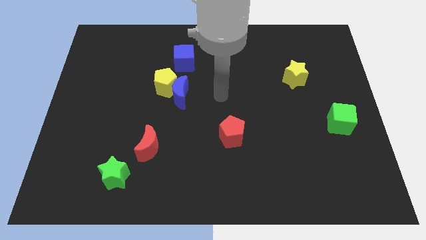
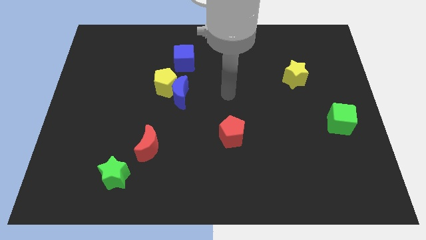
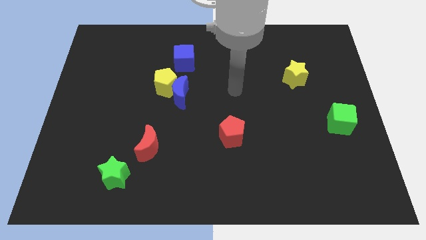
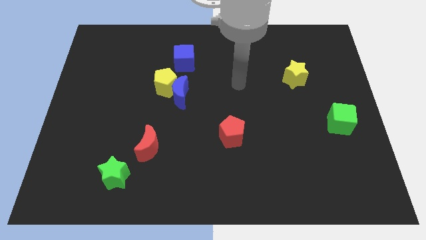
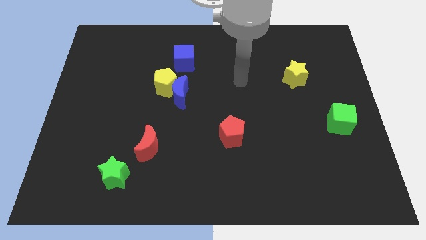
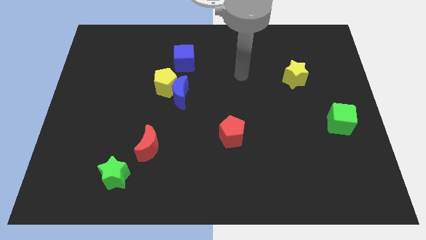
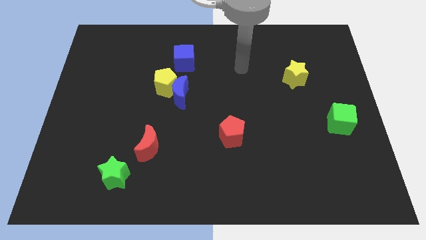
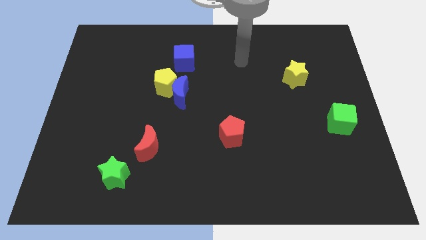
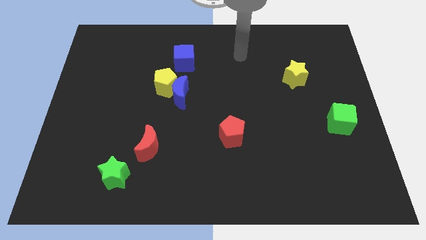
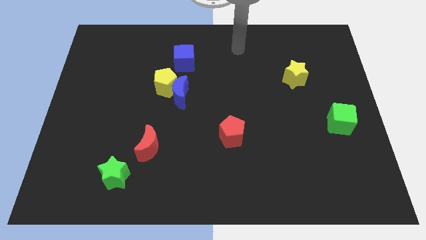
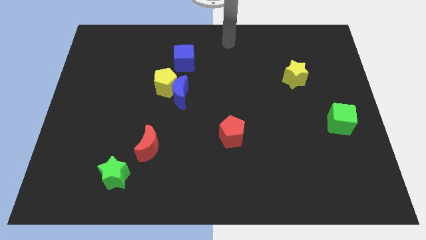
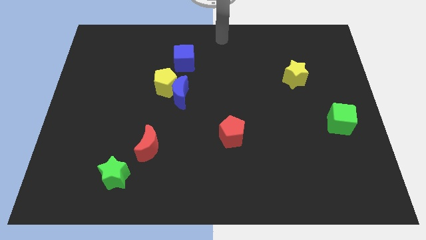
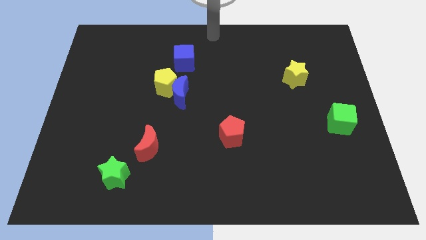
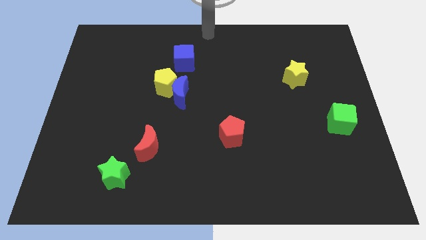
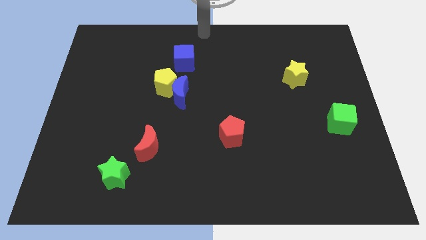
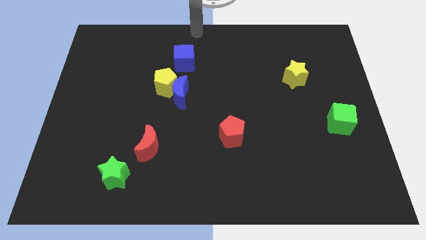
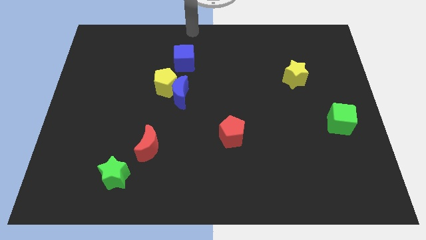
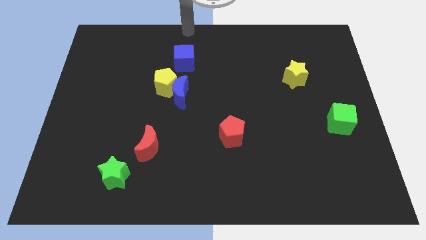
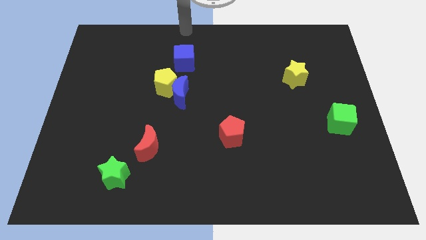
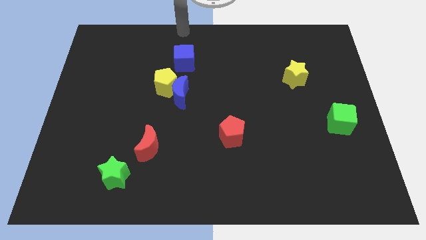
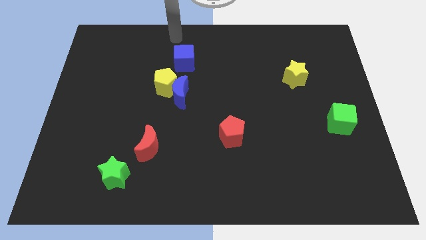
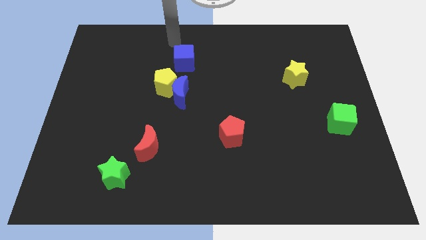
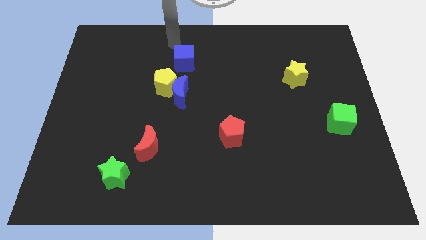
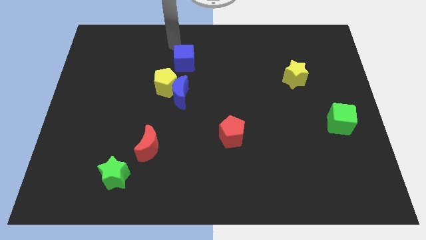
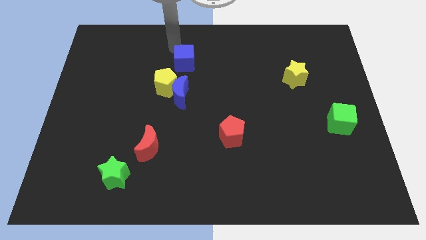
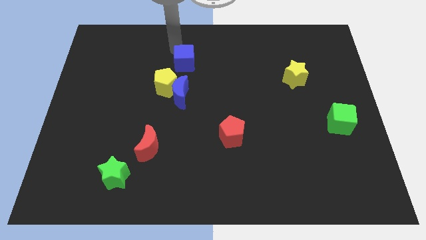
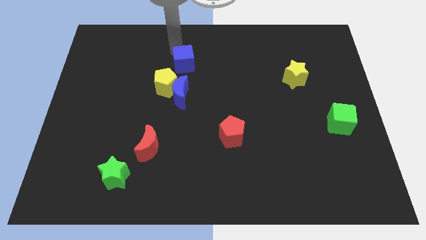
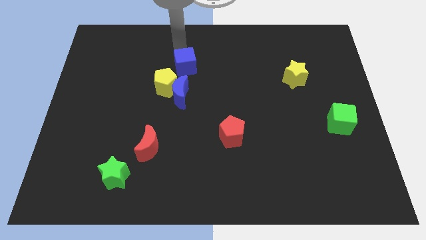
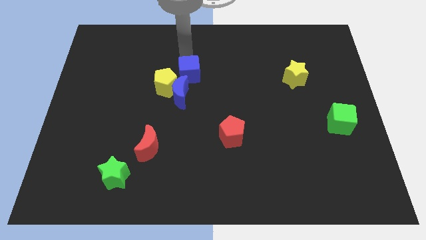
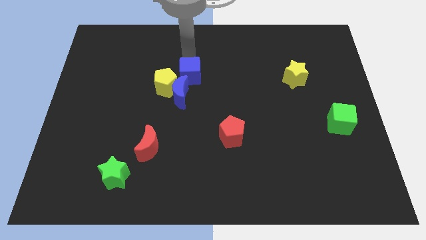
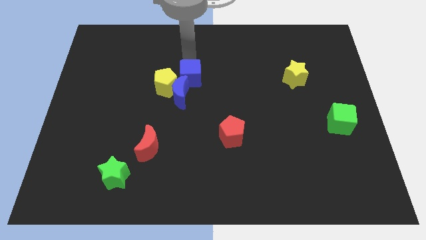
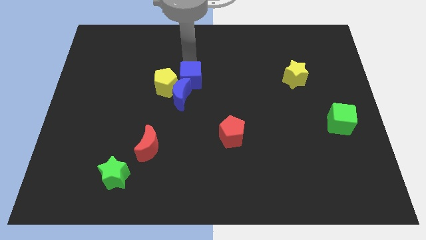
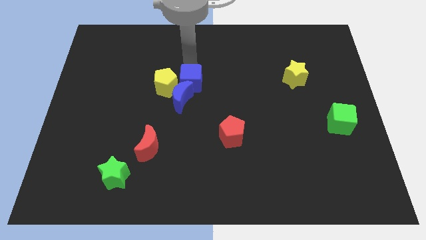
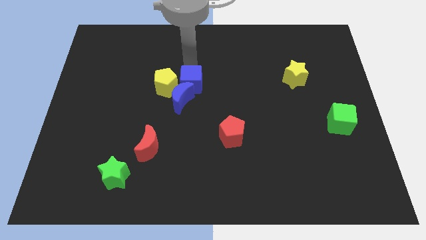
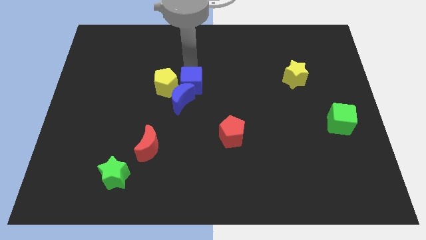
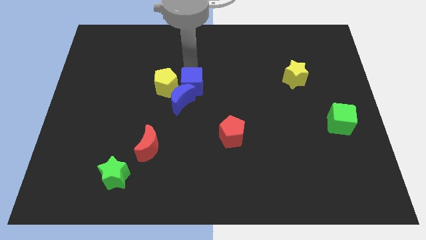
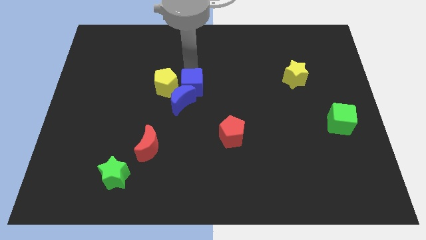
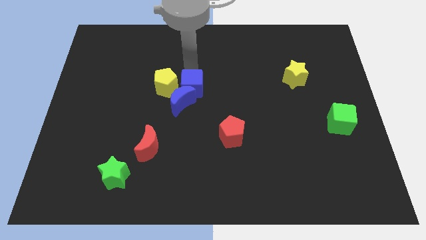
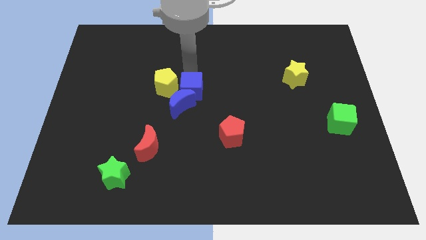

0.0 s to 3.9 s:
push the blue cube to the right of the yellow pentagon

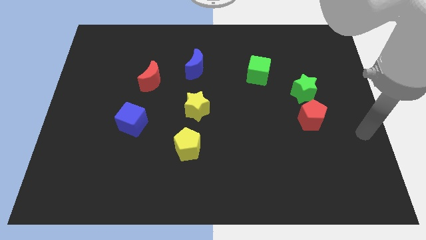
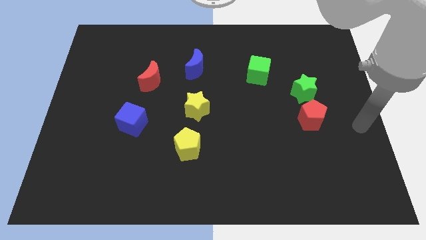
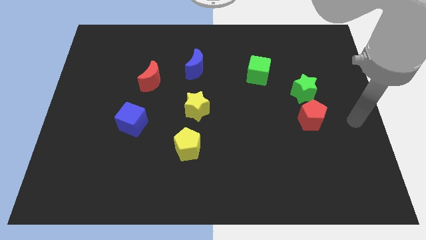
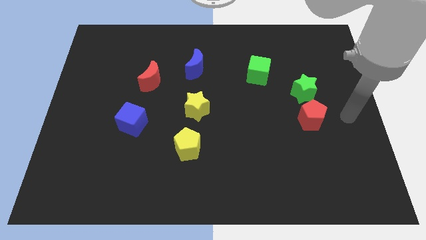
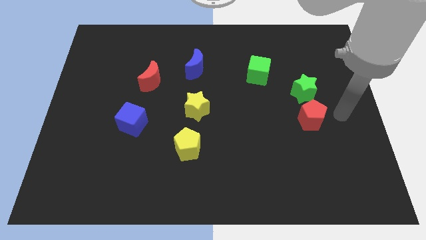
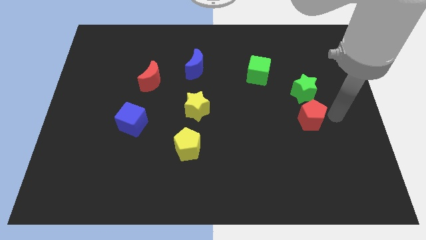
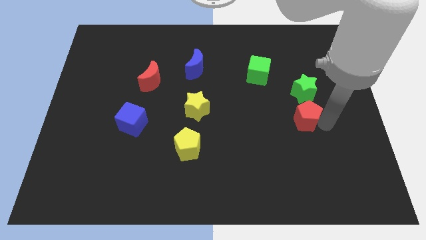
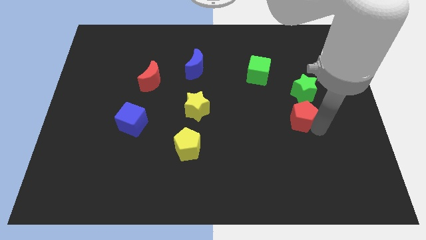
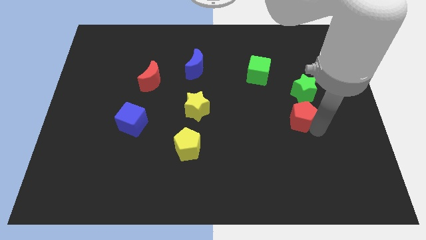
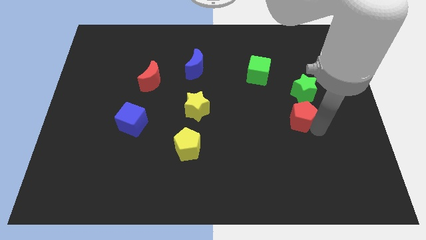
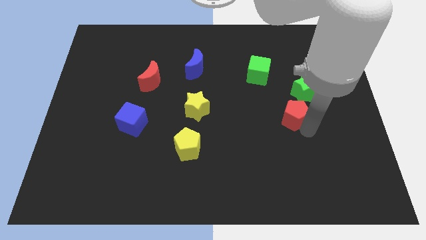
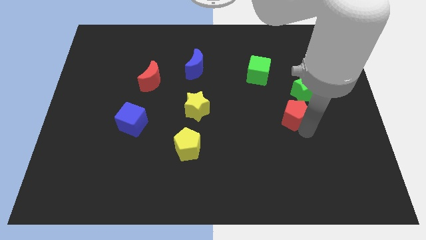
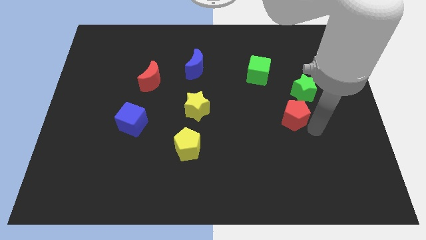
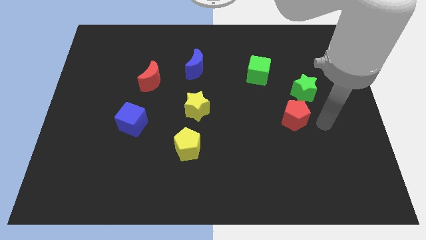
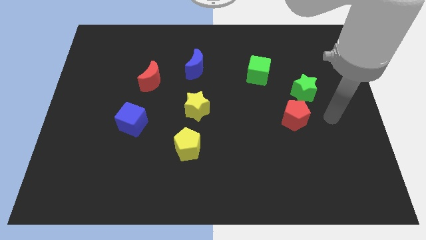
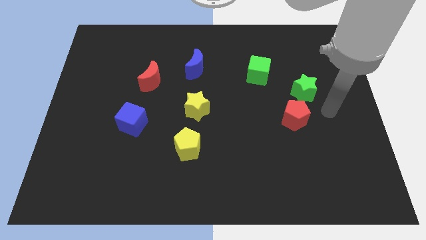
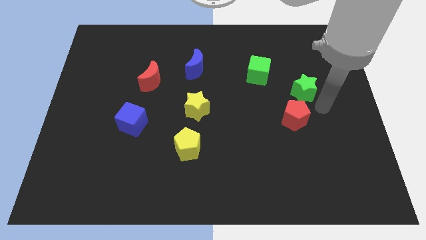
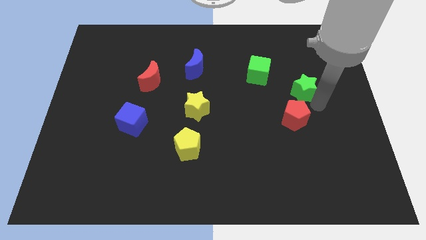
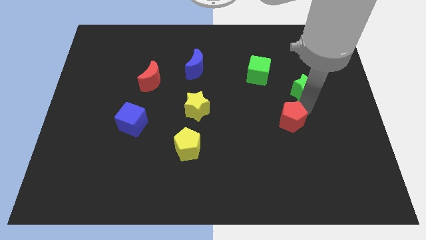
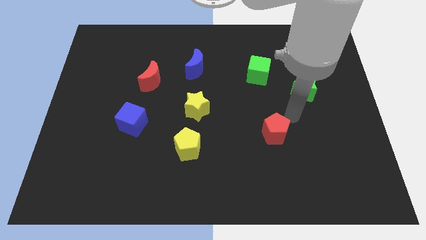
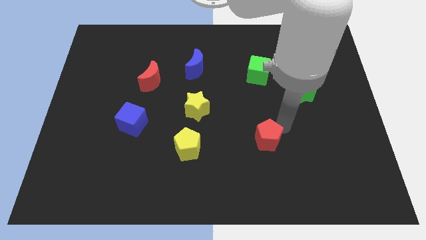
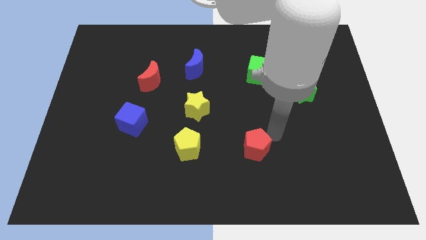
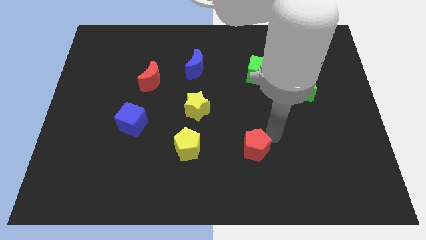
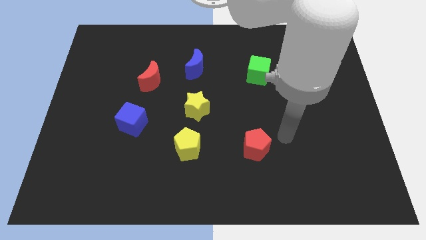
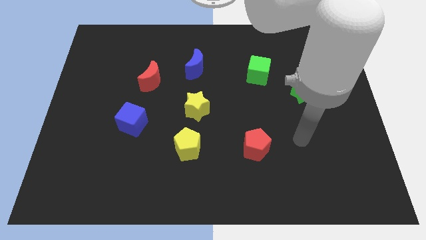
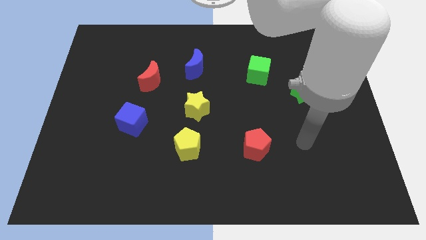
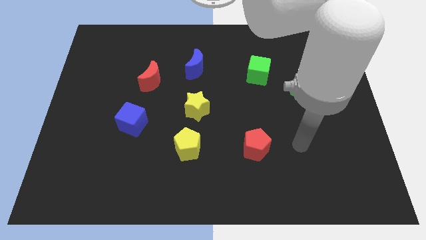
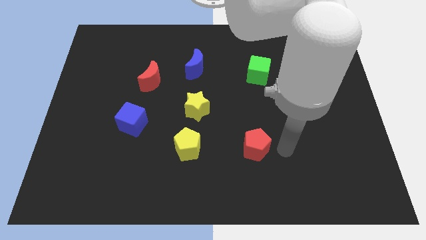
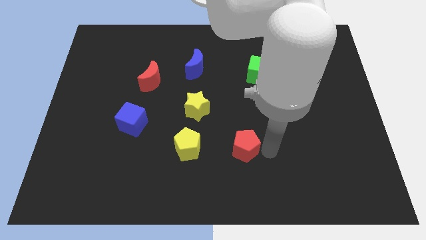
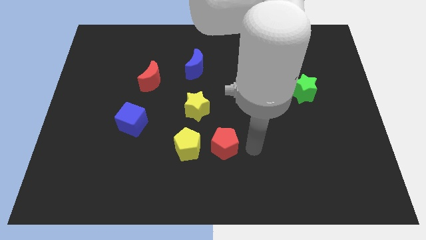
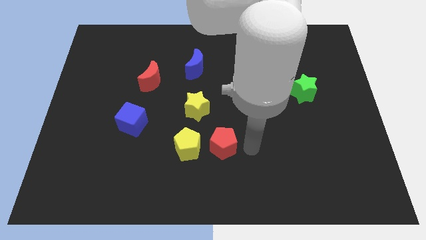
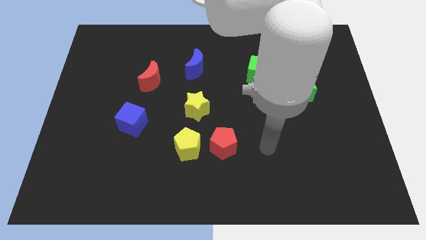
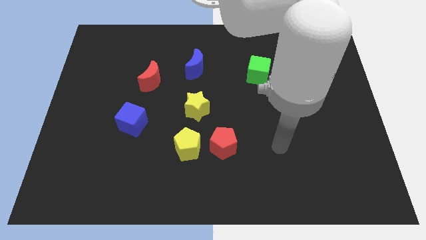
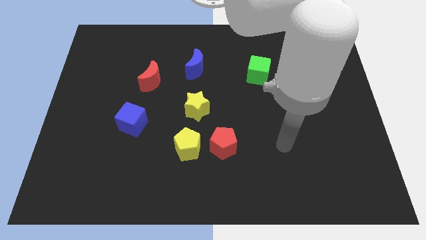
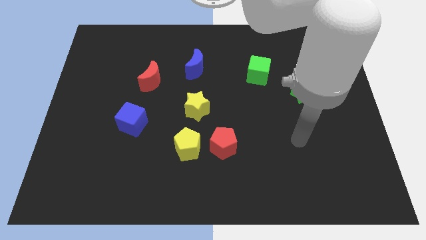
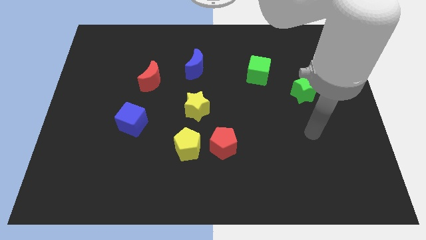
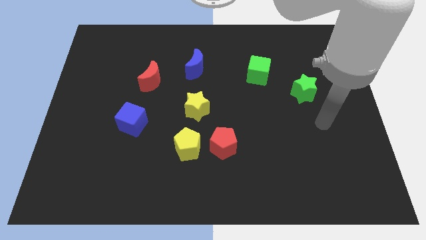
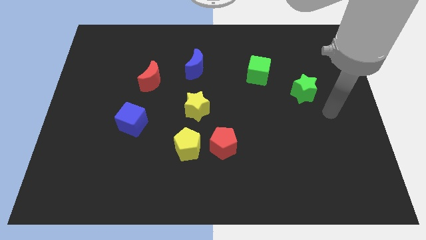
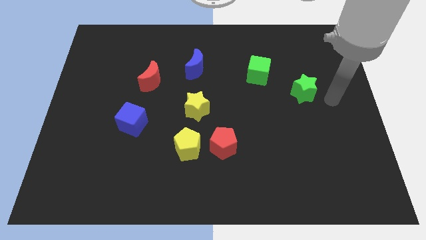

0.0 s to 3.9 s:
move the red pentagon towards yellow pentagon

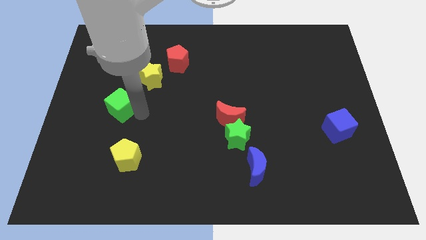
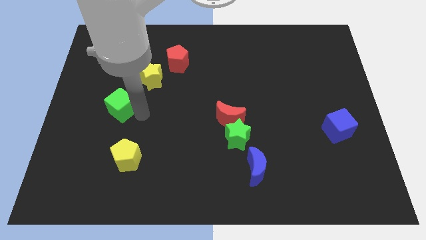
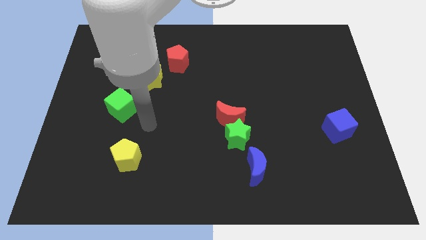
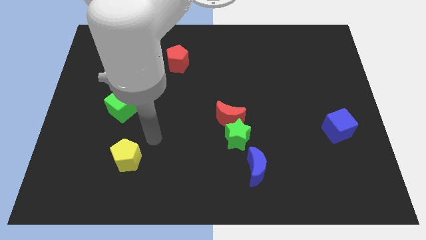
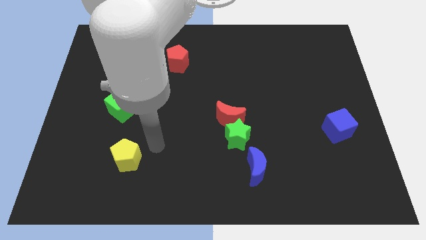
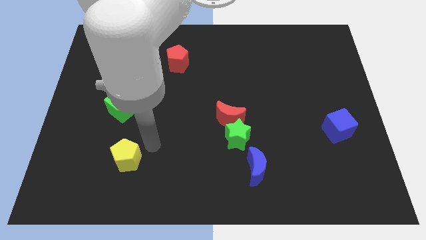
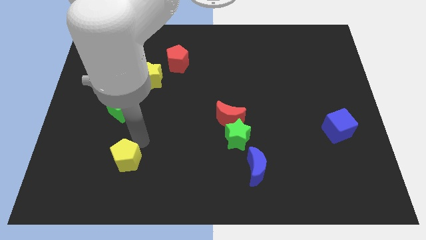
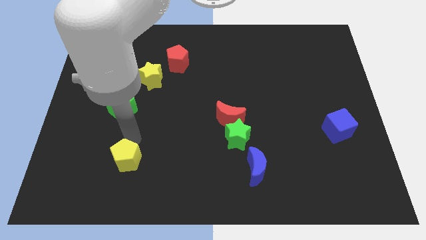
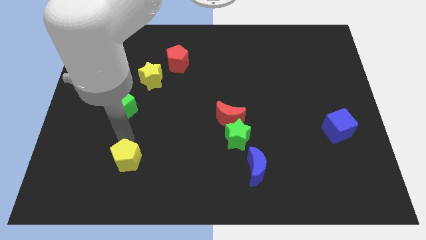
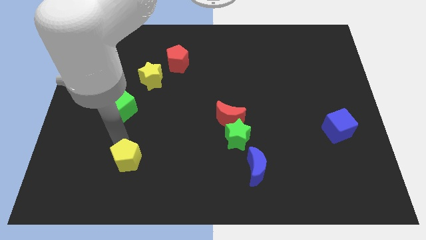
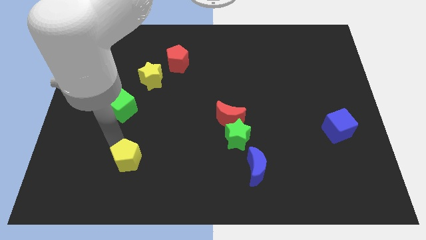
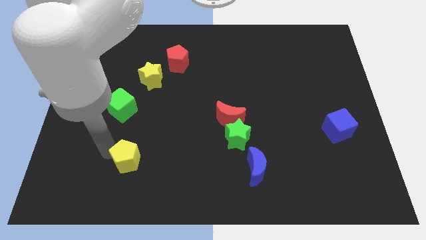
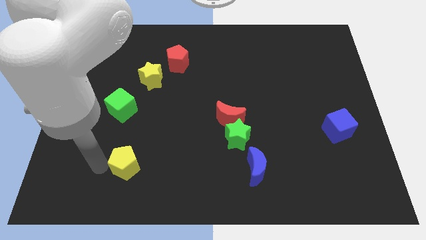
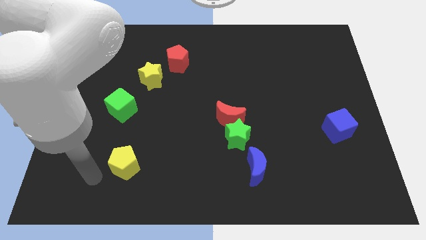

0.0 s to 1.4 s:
push the yellow pentagon slightly to the bottom
